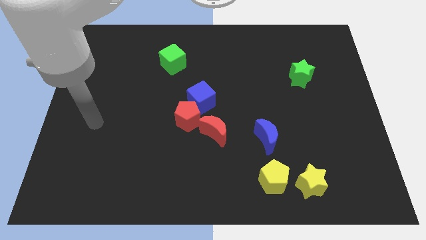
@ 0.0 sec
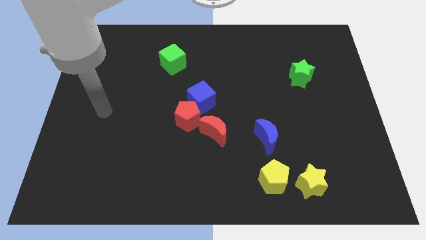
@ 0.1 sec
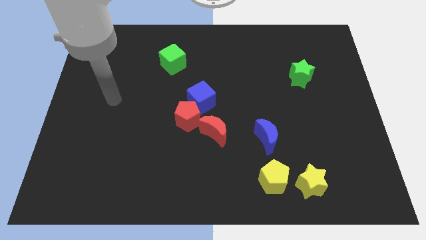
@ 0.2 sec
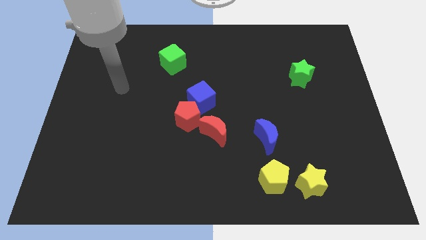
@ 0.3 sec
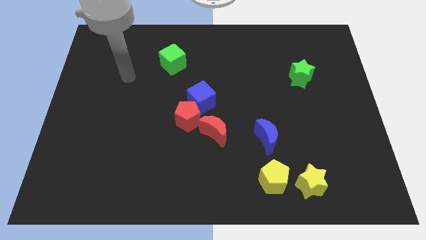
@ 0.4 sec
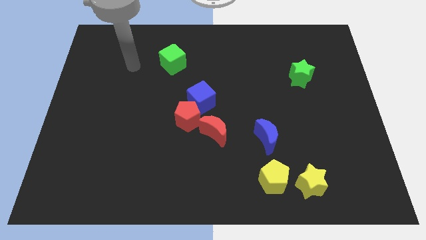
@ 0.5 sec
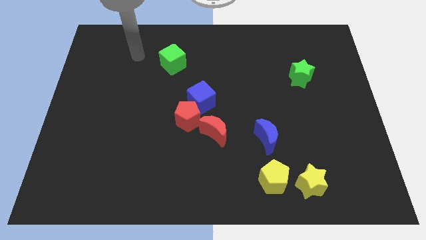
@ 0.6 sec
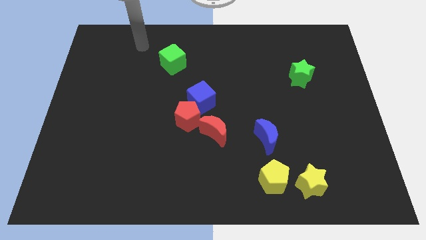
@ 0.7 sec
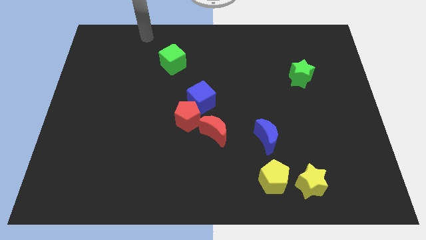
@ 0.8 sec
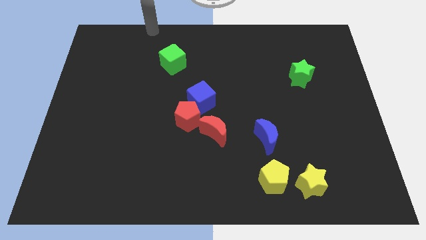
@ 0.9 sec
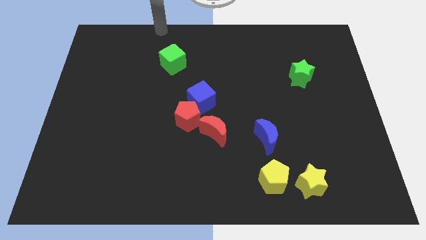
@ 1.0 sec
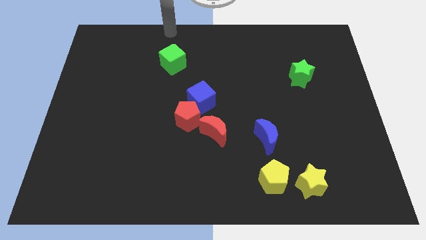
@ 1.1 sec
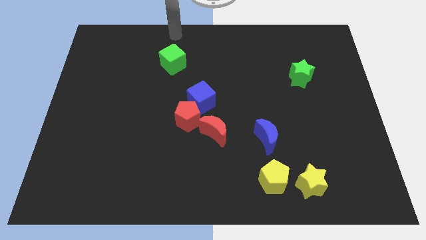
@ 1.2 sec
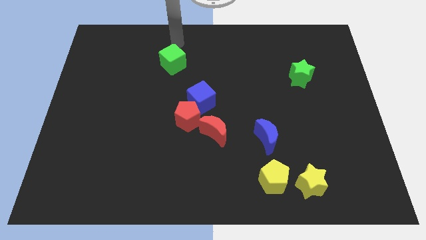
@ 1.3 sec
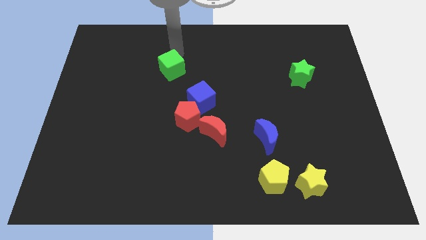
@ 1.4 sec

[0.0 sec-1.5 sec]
touch the green cube

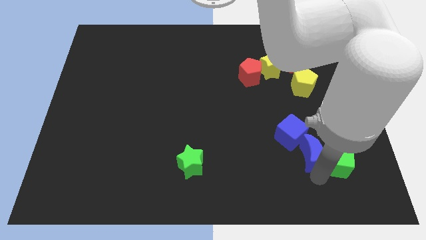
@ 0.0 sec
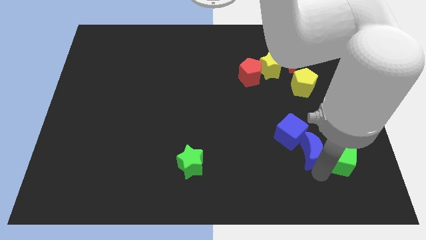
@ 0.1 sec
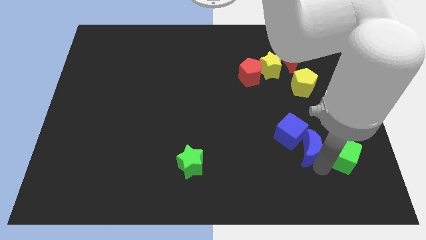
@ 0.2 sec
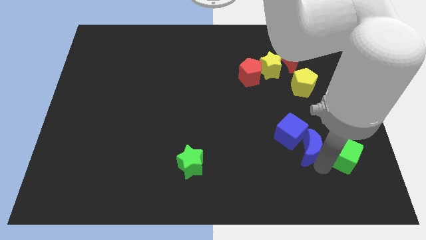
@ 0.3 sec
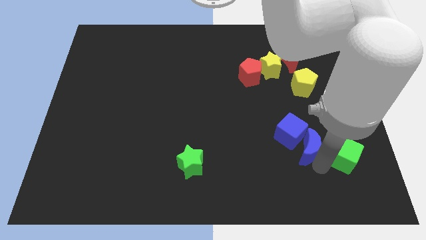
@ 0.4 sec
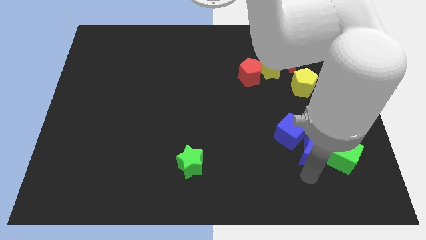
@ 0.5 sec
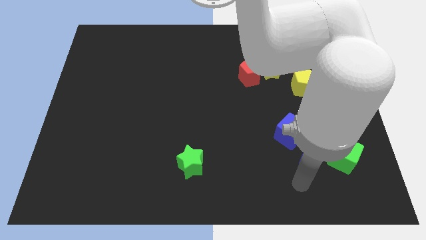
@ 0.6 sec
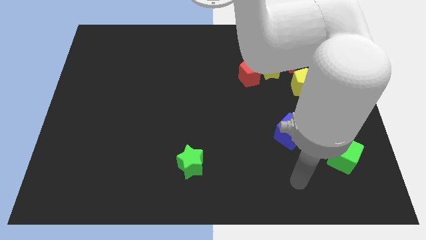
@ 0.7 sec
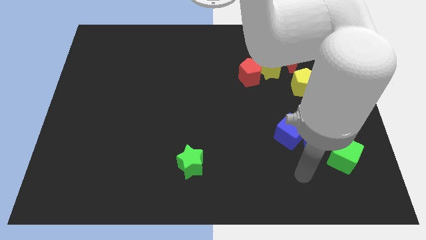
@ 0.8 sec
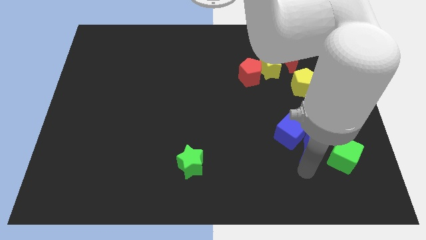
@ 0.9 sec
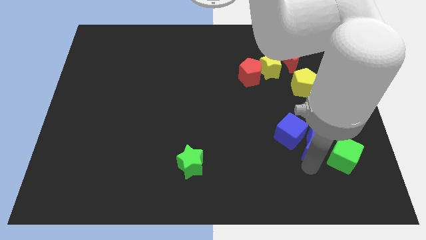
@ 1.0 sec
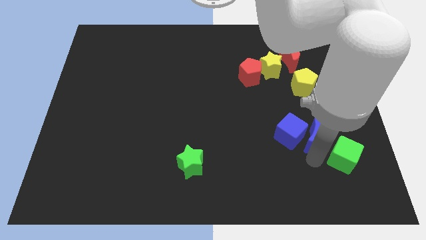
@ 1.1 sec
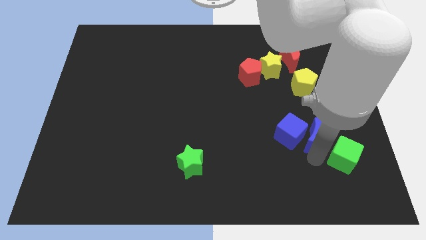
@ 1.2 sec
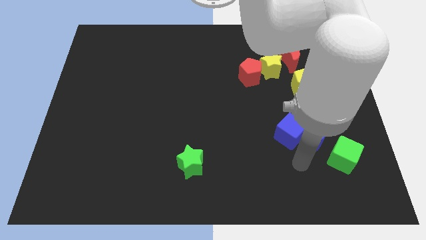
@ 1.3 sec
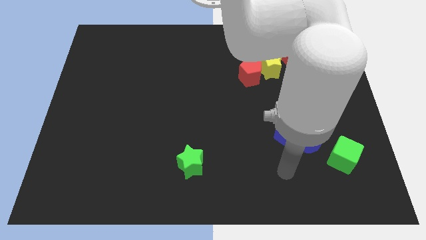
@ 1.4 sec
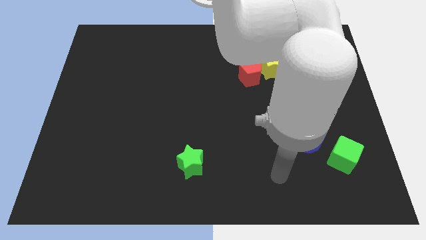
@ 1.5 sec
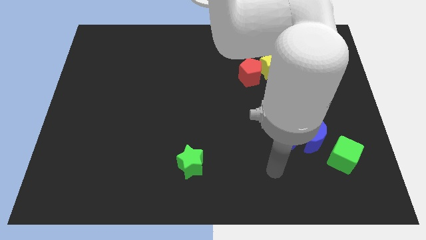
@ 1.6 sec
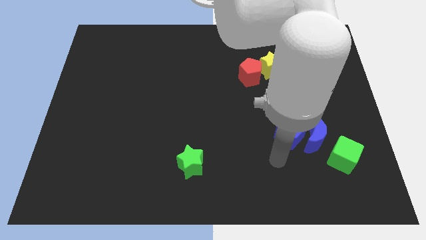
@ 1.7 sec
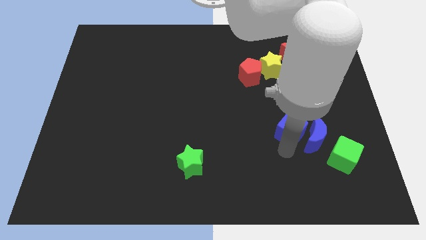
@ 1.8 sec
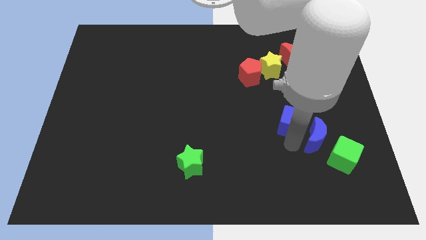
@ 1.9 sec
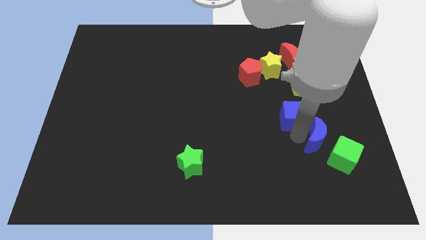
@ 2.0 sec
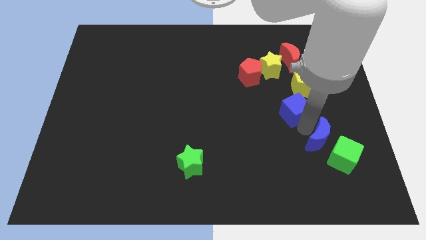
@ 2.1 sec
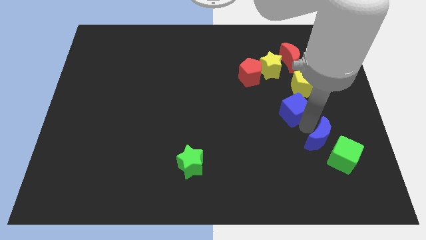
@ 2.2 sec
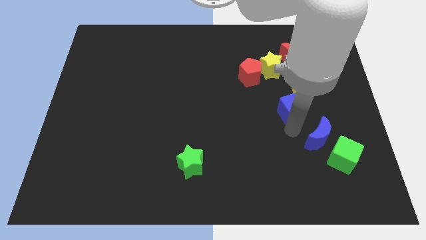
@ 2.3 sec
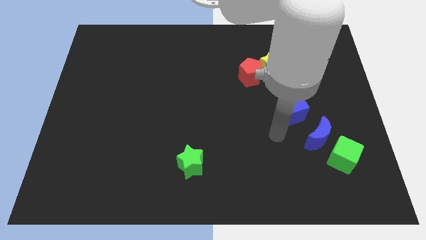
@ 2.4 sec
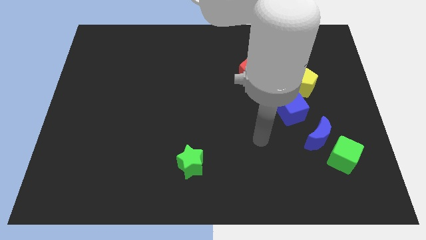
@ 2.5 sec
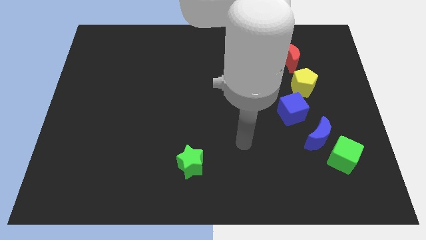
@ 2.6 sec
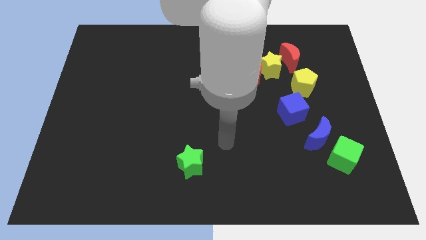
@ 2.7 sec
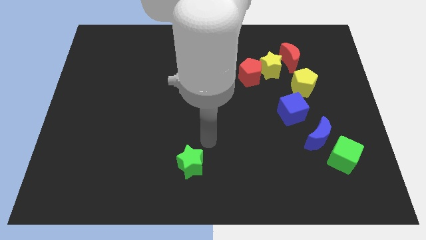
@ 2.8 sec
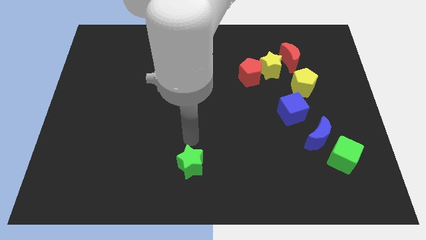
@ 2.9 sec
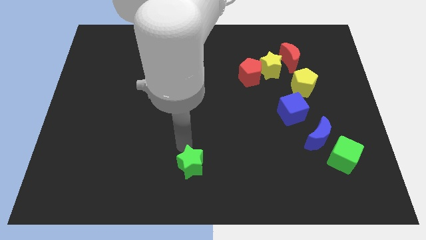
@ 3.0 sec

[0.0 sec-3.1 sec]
push the green cube blue crescent and blue cube upwards

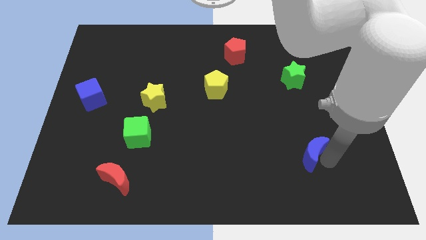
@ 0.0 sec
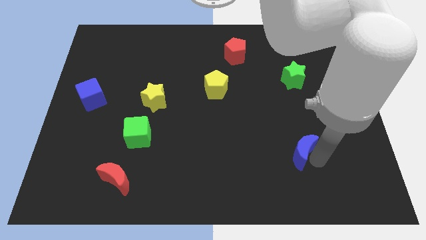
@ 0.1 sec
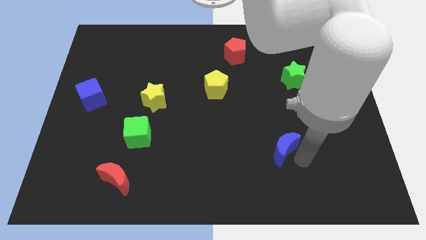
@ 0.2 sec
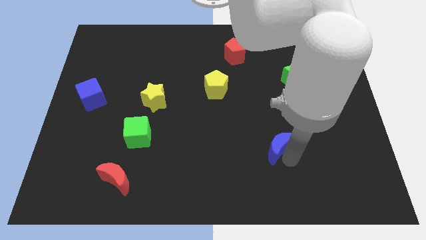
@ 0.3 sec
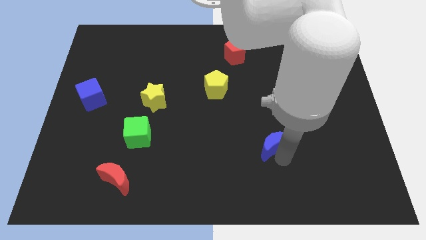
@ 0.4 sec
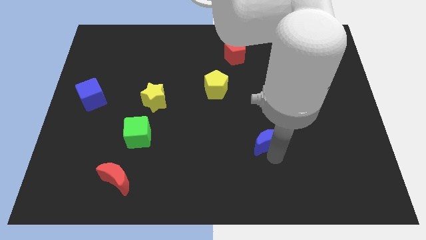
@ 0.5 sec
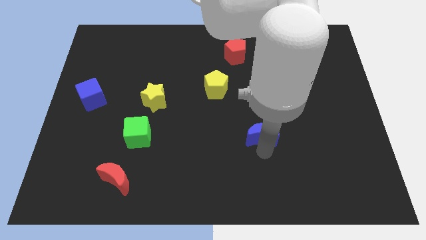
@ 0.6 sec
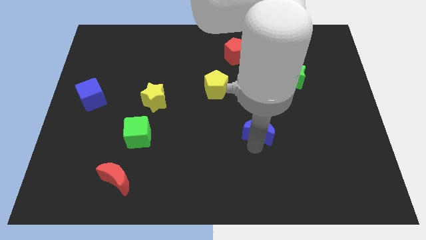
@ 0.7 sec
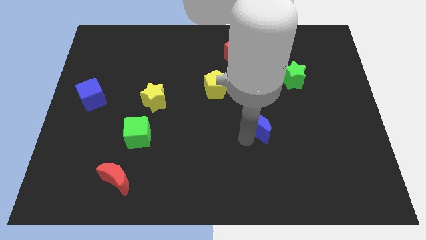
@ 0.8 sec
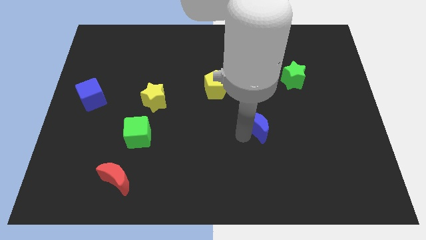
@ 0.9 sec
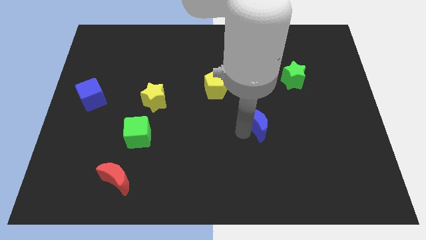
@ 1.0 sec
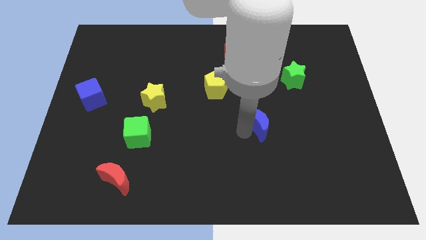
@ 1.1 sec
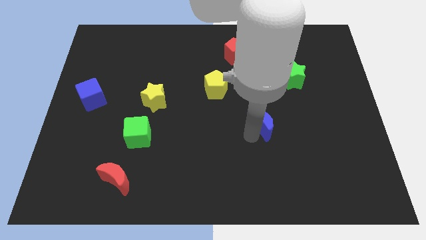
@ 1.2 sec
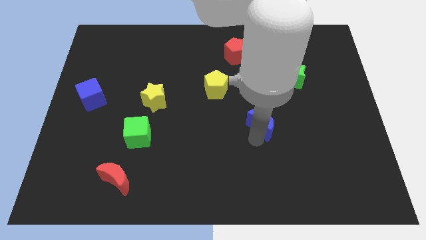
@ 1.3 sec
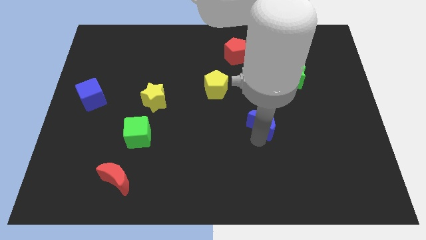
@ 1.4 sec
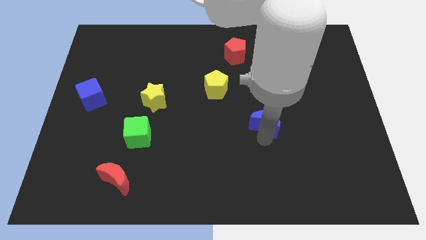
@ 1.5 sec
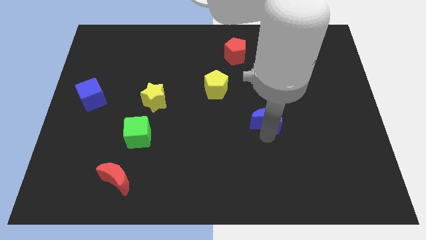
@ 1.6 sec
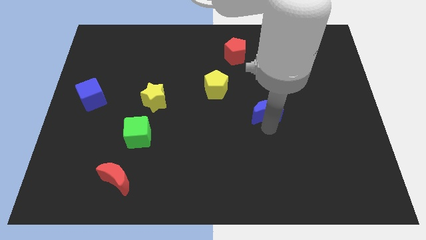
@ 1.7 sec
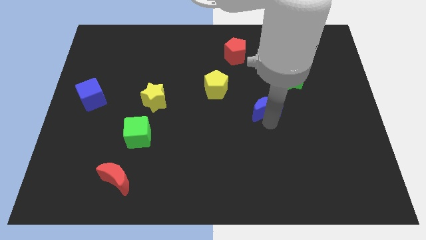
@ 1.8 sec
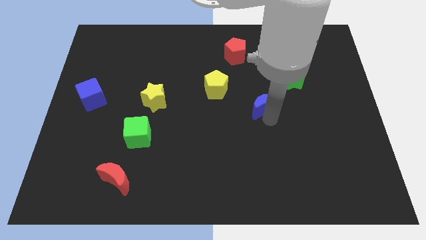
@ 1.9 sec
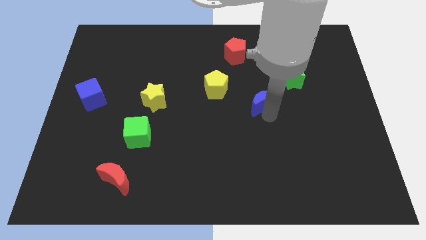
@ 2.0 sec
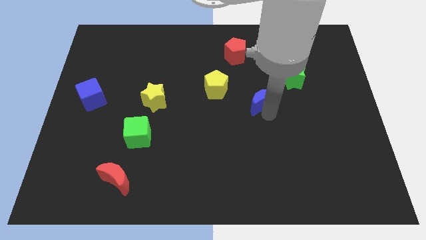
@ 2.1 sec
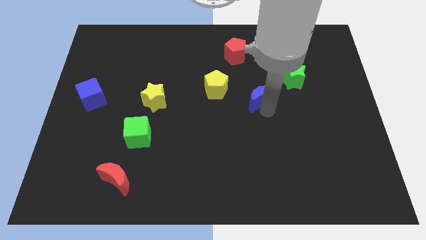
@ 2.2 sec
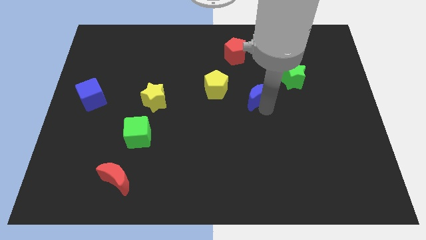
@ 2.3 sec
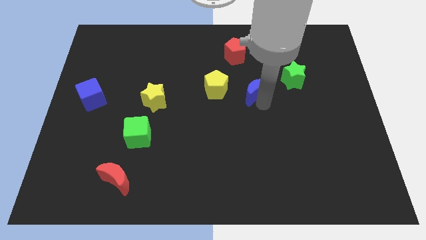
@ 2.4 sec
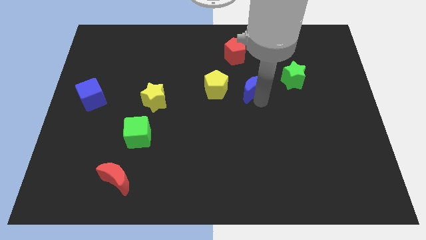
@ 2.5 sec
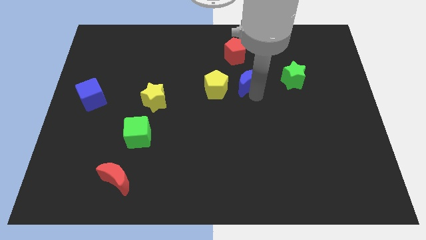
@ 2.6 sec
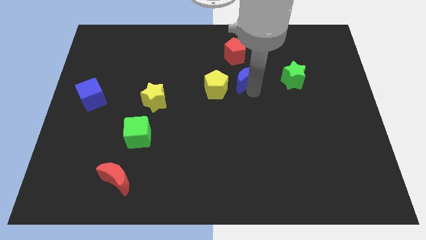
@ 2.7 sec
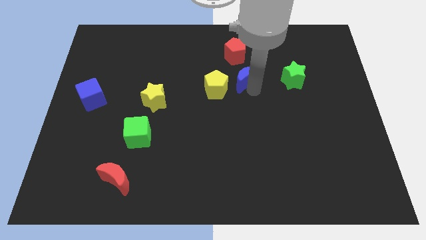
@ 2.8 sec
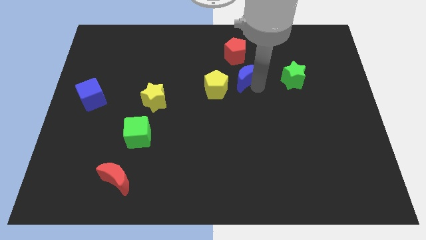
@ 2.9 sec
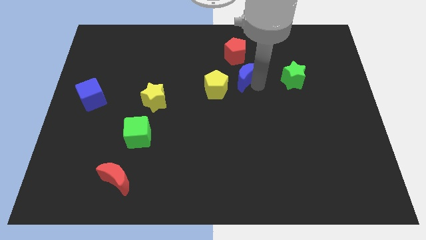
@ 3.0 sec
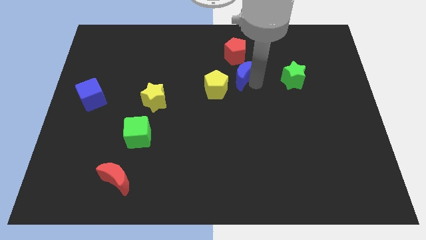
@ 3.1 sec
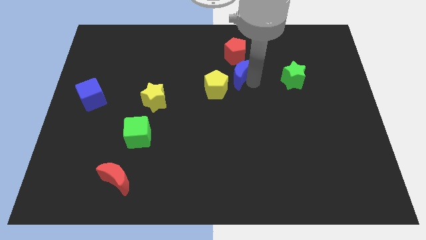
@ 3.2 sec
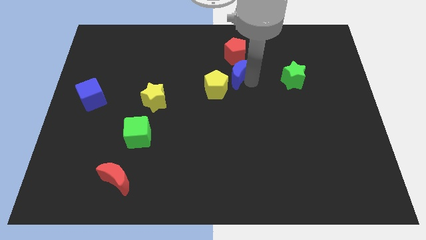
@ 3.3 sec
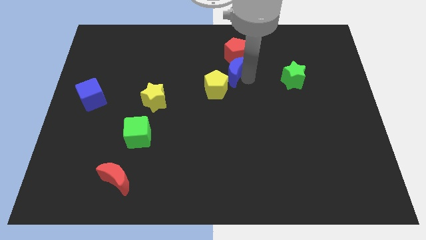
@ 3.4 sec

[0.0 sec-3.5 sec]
push blue crescent below red pentagon

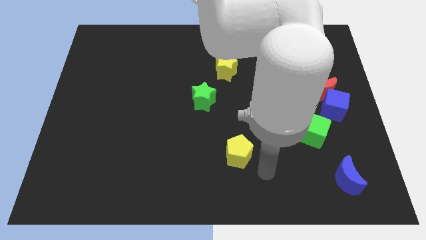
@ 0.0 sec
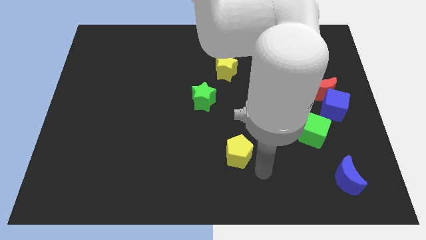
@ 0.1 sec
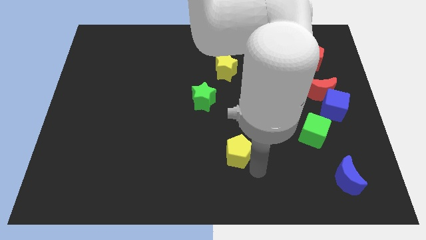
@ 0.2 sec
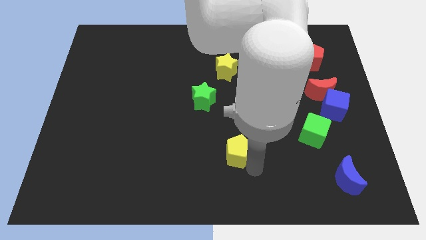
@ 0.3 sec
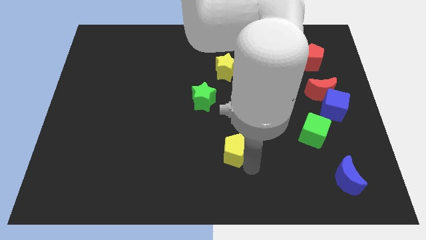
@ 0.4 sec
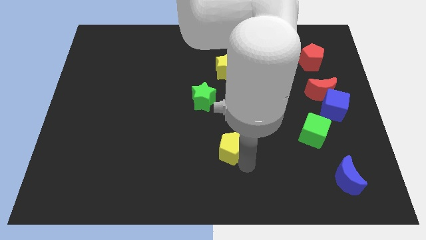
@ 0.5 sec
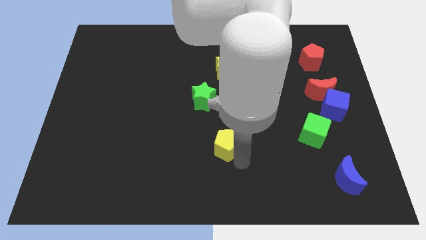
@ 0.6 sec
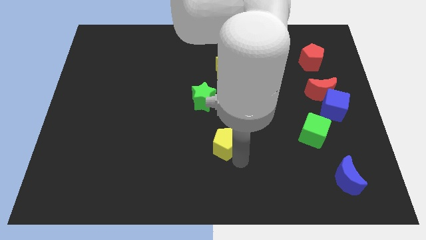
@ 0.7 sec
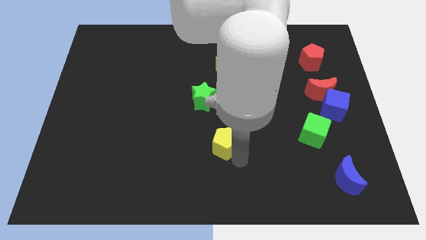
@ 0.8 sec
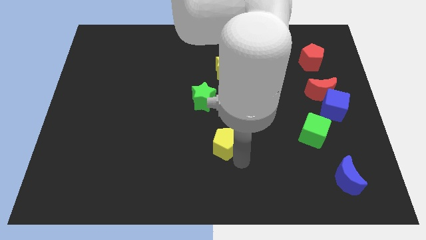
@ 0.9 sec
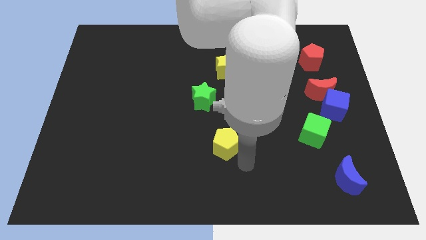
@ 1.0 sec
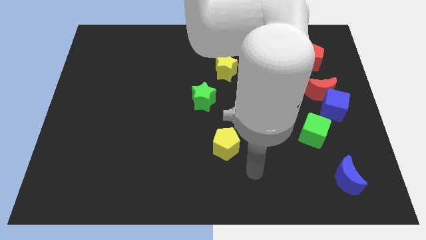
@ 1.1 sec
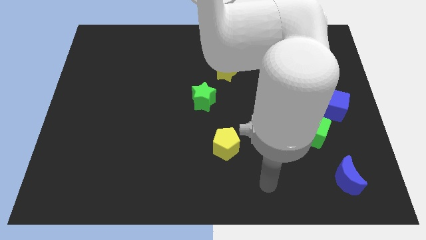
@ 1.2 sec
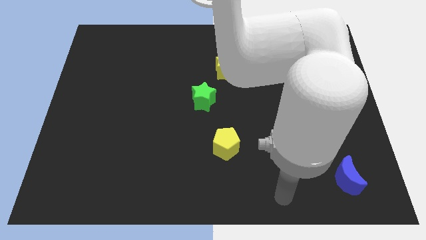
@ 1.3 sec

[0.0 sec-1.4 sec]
push the yellow pentagon slightly to the top of the board
